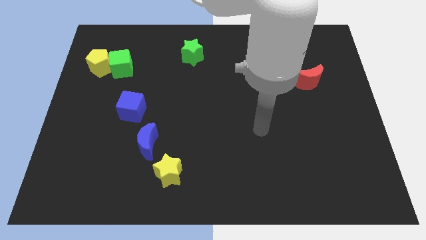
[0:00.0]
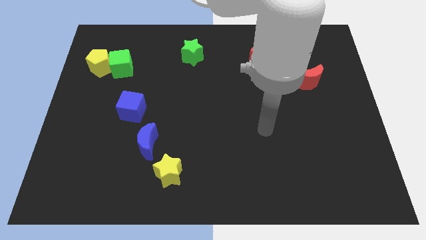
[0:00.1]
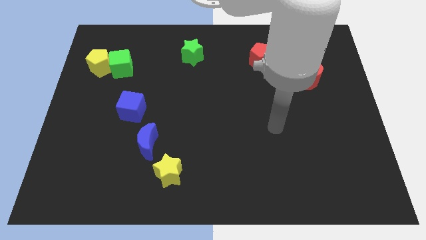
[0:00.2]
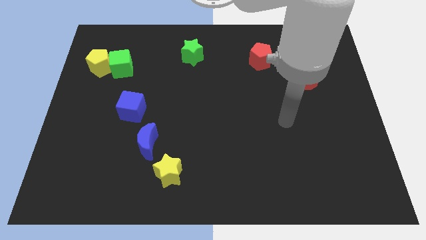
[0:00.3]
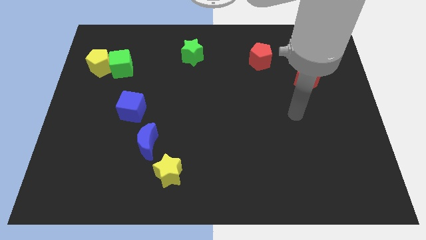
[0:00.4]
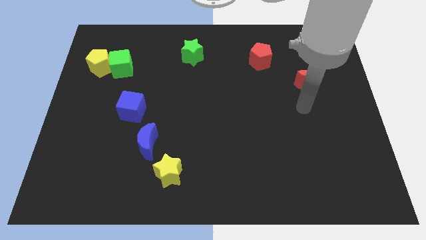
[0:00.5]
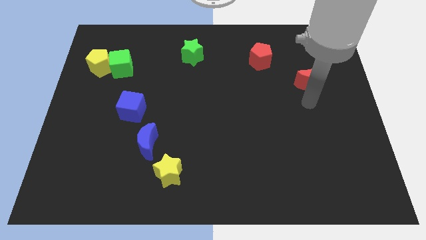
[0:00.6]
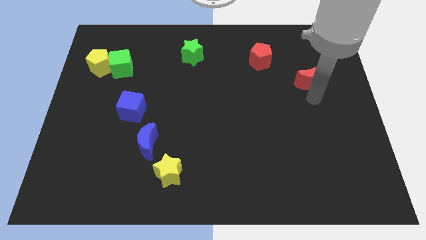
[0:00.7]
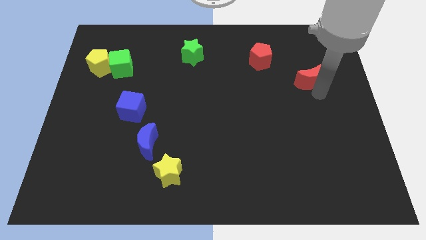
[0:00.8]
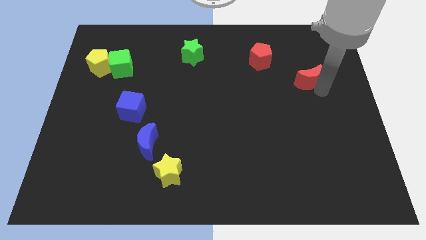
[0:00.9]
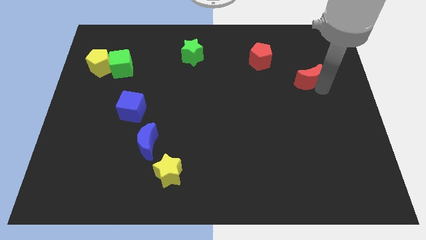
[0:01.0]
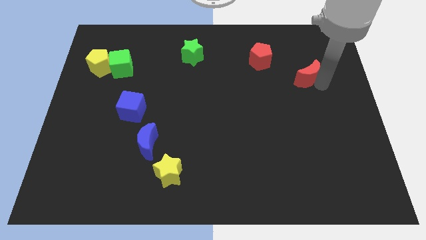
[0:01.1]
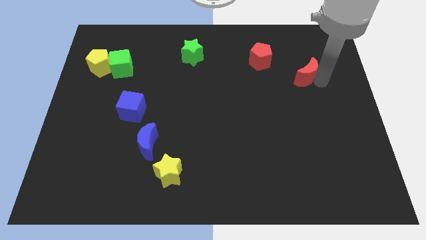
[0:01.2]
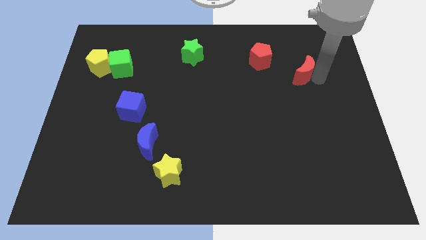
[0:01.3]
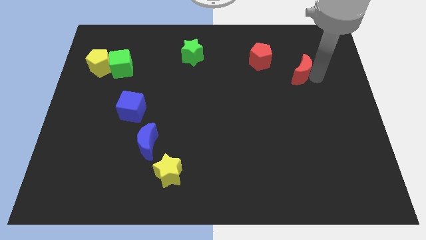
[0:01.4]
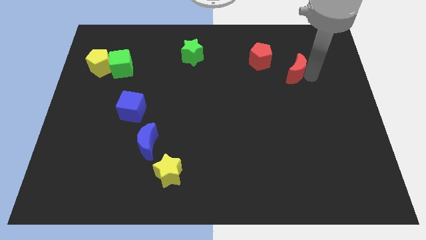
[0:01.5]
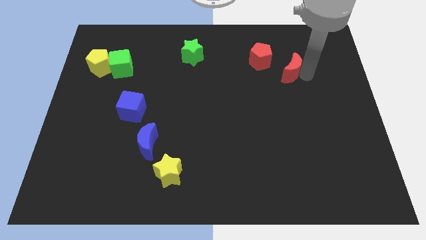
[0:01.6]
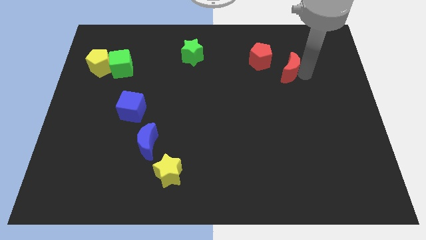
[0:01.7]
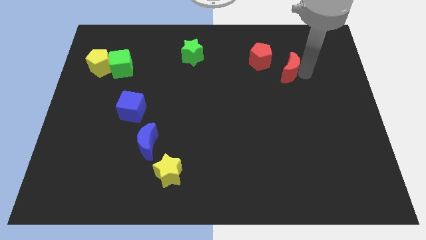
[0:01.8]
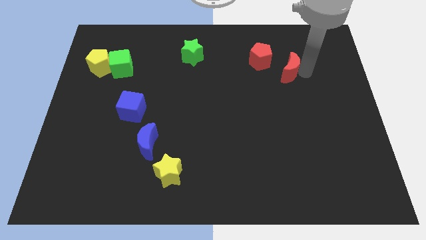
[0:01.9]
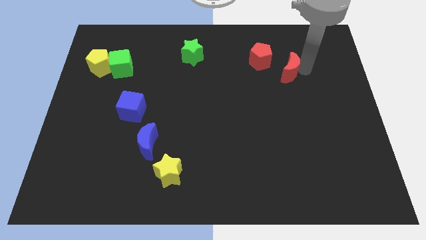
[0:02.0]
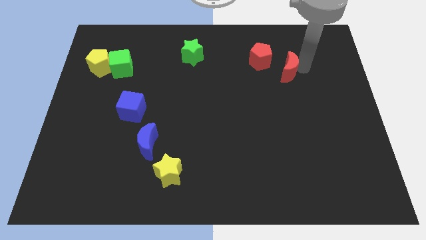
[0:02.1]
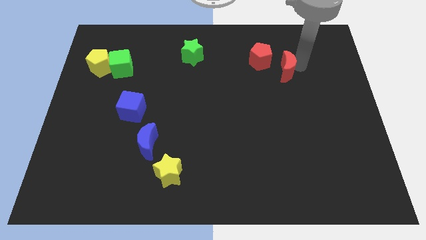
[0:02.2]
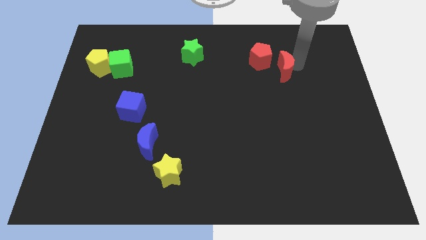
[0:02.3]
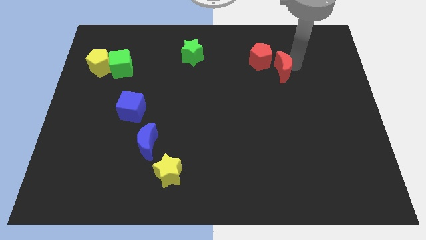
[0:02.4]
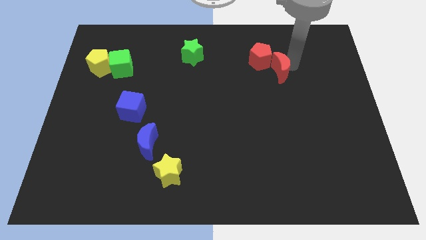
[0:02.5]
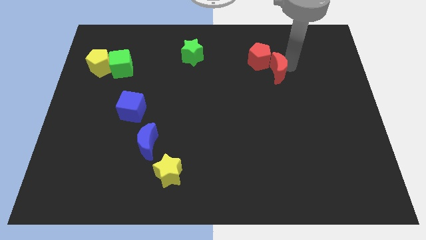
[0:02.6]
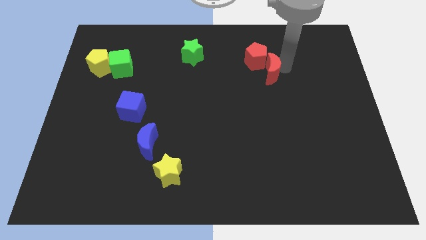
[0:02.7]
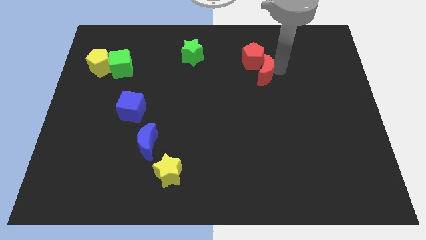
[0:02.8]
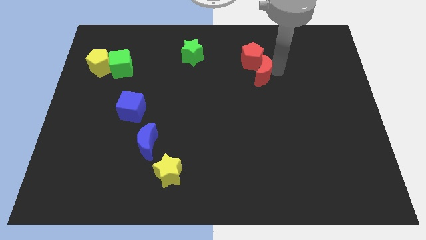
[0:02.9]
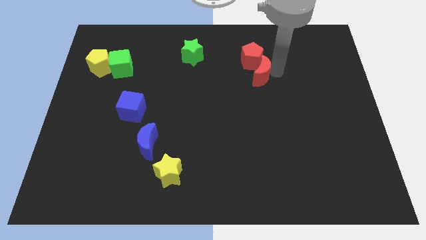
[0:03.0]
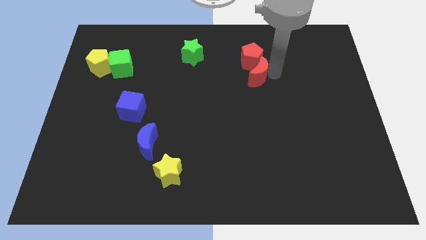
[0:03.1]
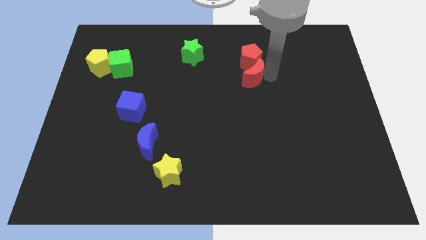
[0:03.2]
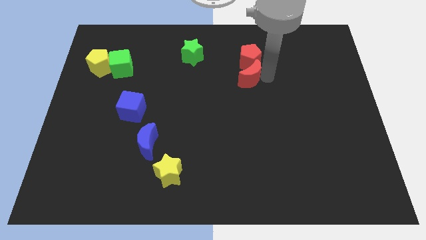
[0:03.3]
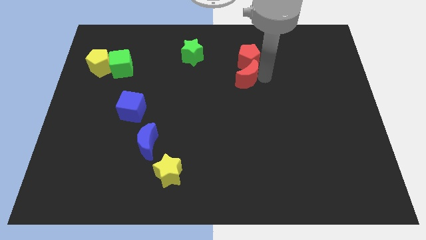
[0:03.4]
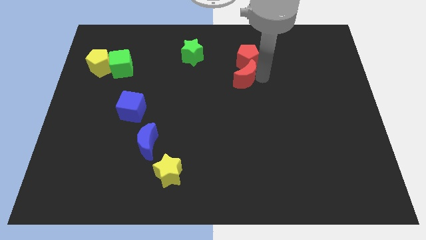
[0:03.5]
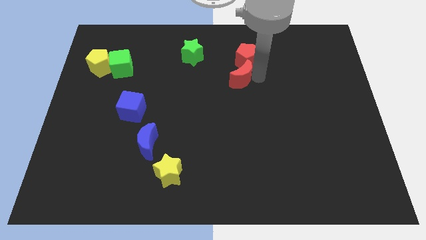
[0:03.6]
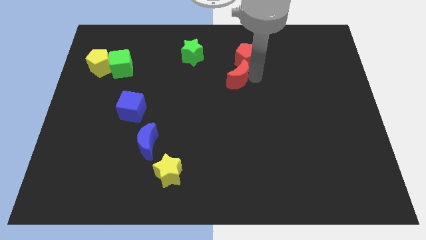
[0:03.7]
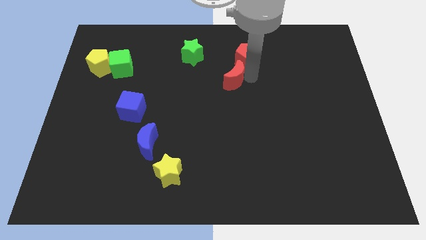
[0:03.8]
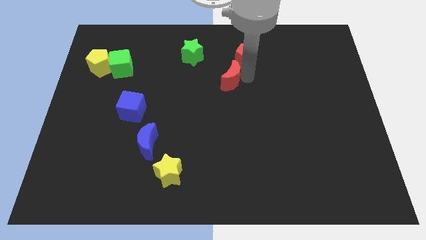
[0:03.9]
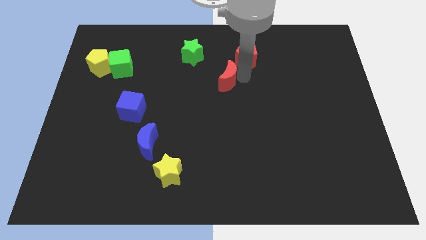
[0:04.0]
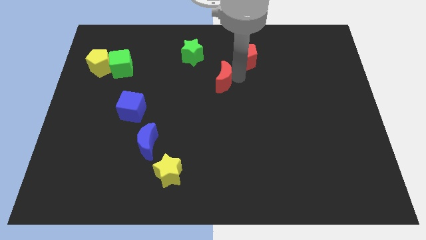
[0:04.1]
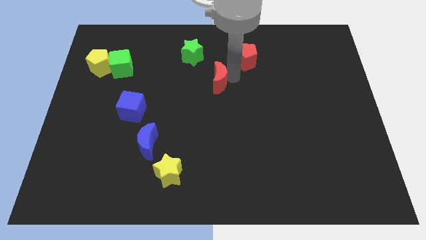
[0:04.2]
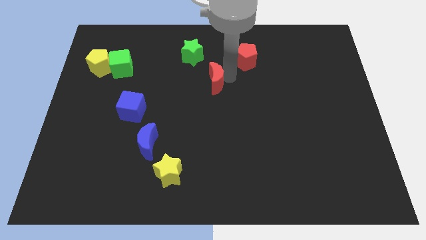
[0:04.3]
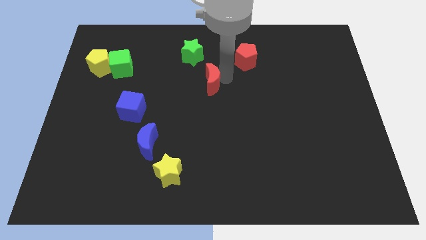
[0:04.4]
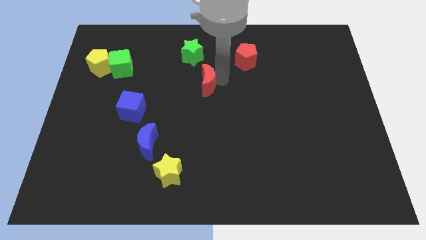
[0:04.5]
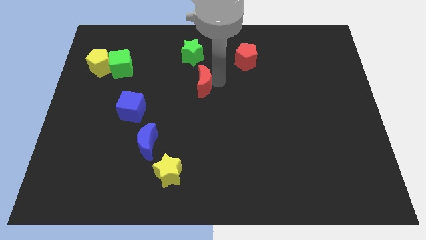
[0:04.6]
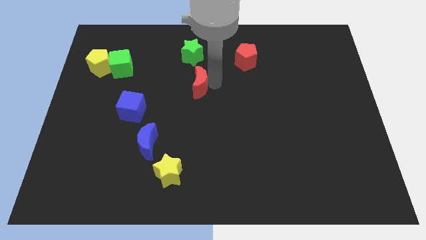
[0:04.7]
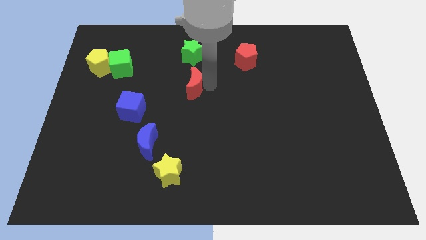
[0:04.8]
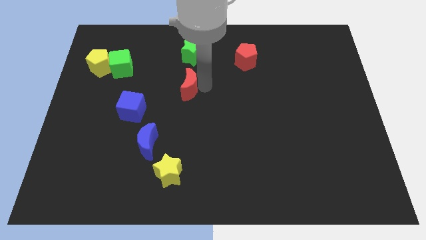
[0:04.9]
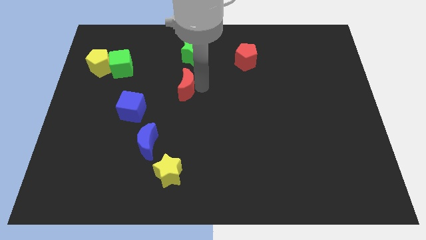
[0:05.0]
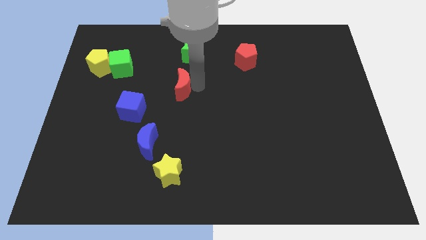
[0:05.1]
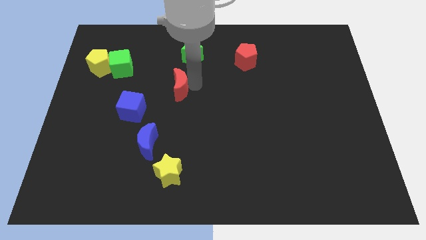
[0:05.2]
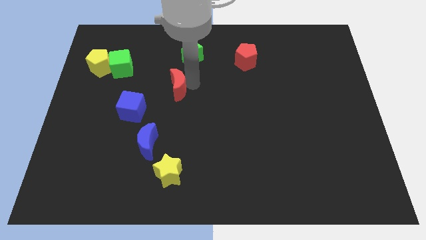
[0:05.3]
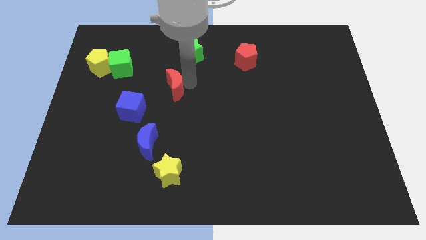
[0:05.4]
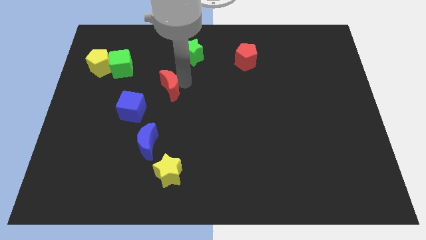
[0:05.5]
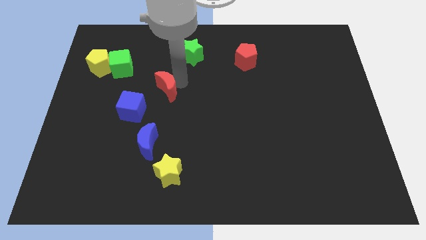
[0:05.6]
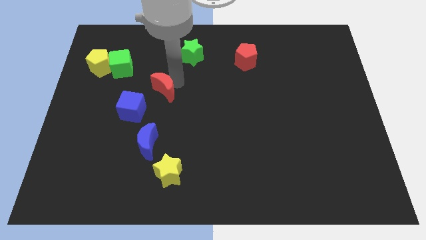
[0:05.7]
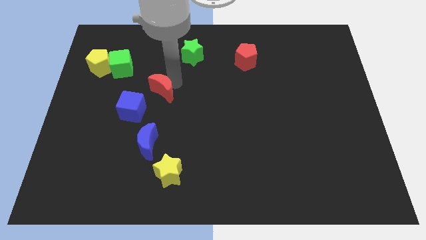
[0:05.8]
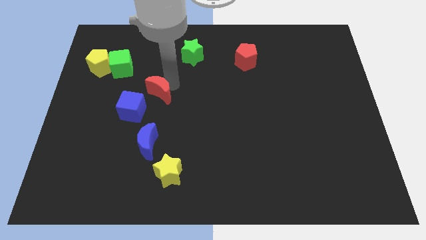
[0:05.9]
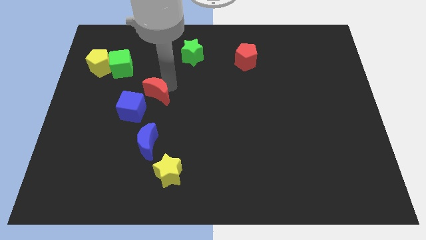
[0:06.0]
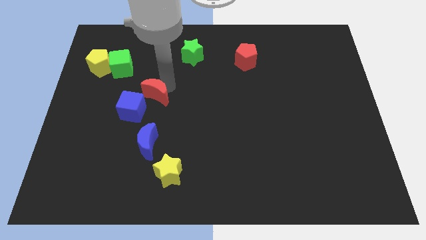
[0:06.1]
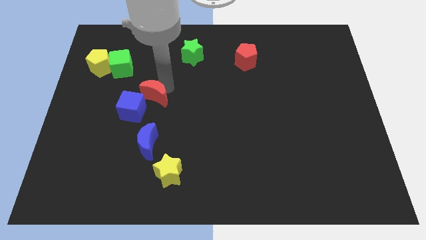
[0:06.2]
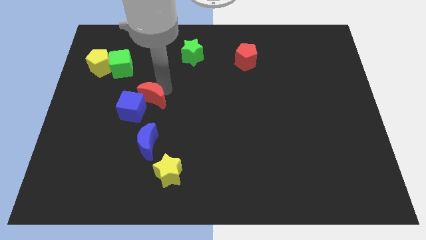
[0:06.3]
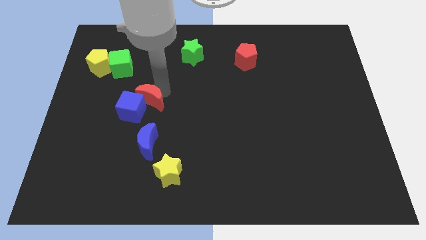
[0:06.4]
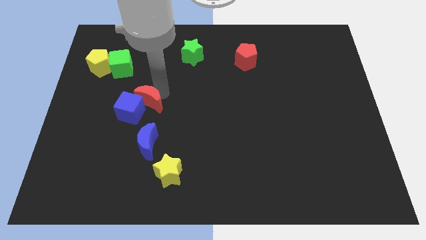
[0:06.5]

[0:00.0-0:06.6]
slide the red moon to the blue cube

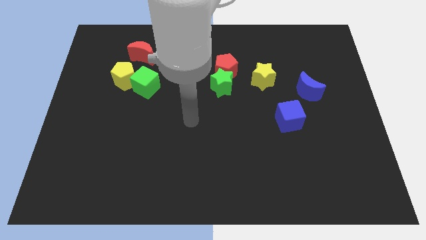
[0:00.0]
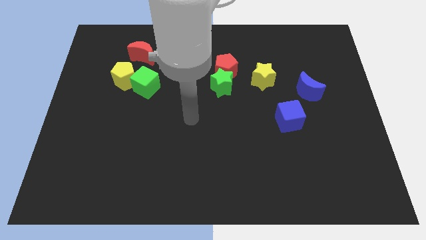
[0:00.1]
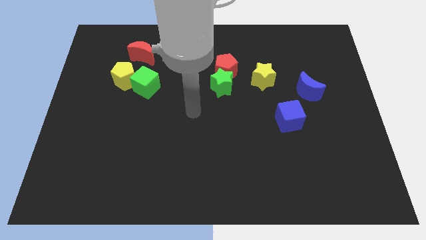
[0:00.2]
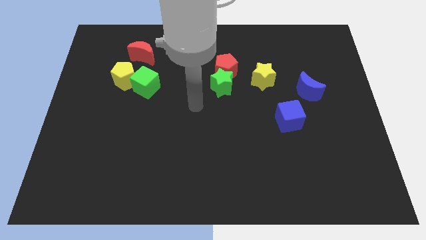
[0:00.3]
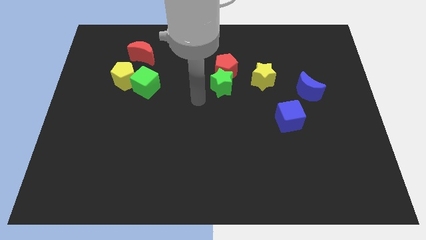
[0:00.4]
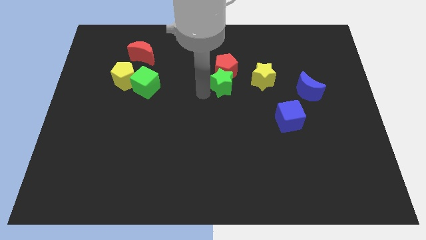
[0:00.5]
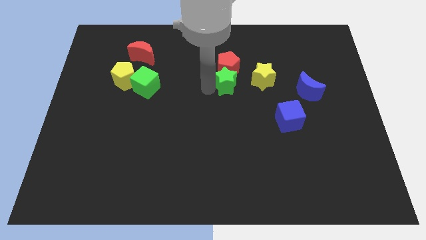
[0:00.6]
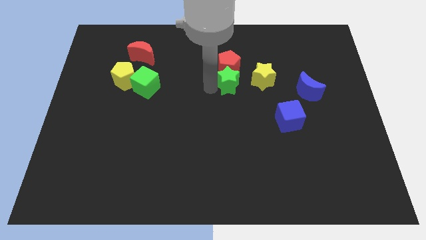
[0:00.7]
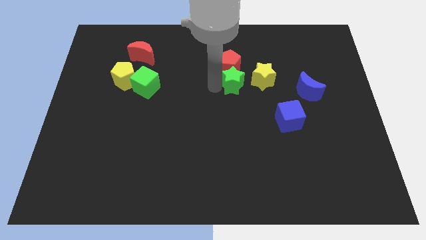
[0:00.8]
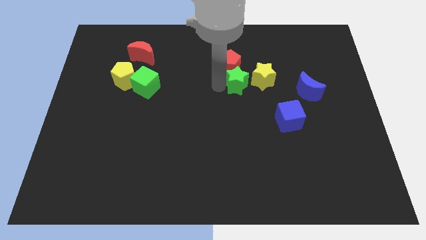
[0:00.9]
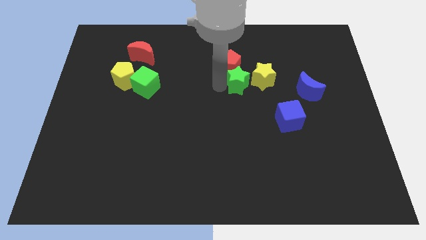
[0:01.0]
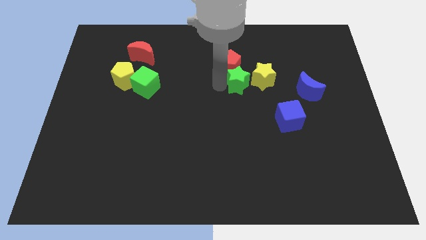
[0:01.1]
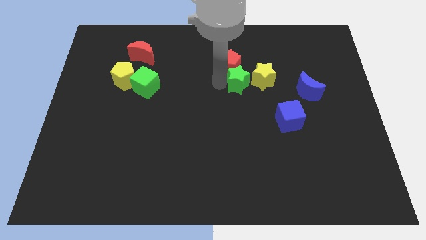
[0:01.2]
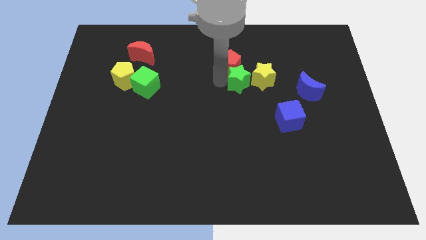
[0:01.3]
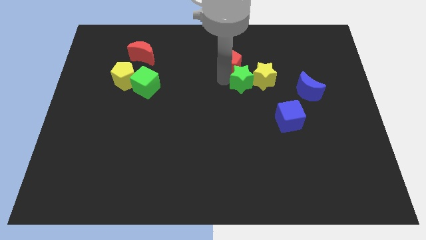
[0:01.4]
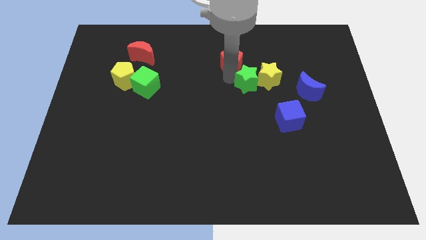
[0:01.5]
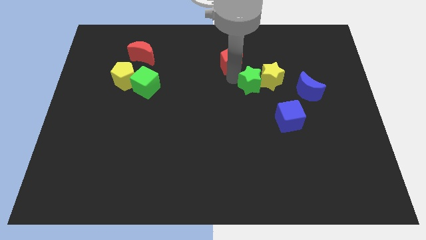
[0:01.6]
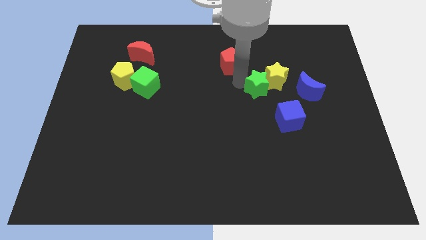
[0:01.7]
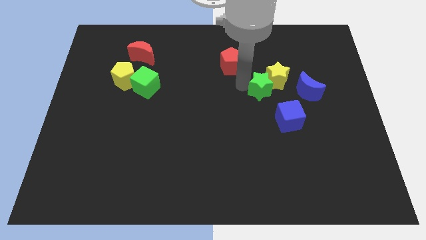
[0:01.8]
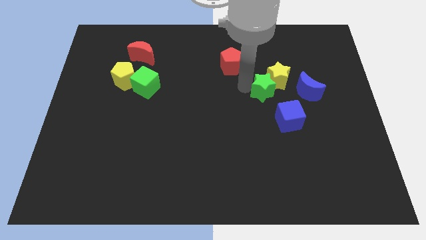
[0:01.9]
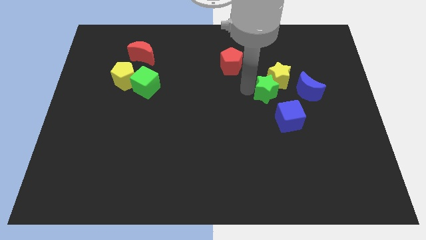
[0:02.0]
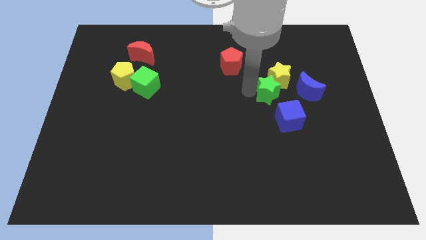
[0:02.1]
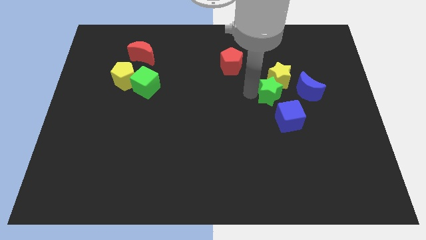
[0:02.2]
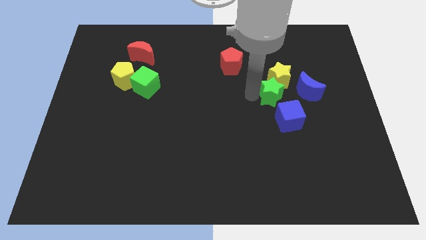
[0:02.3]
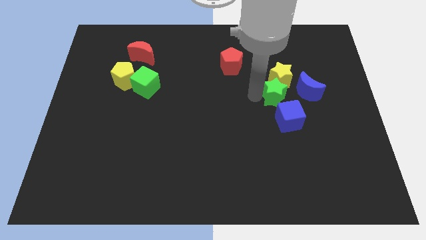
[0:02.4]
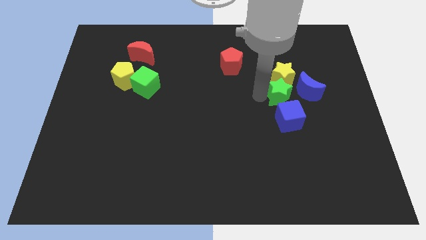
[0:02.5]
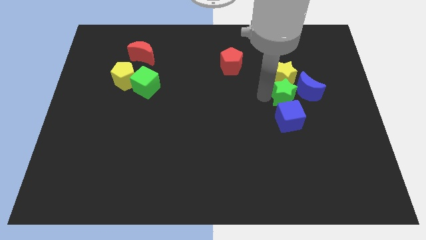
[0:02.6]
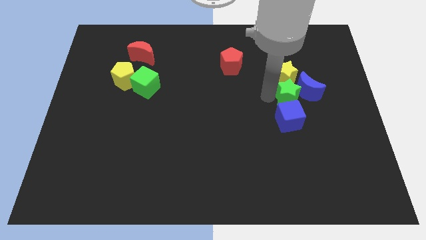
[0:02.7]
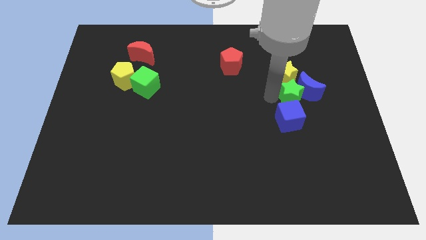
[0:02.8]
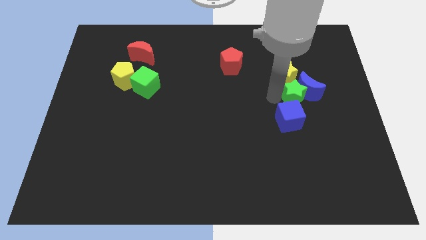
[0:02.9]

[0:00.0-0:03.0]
slide the green star towards the blue moon
